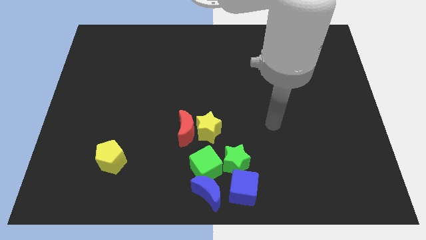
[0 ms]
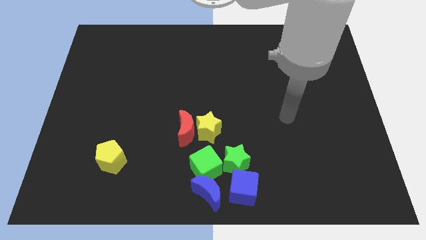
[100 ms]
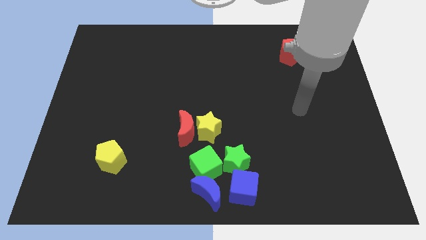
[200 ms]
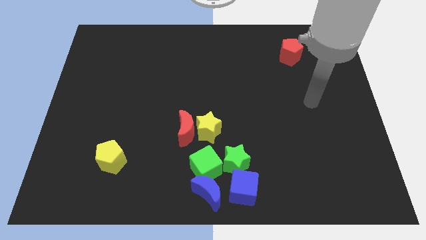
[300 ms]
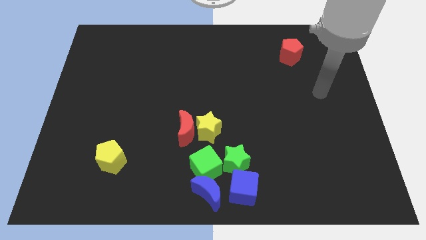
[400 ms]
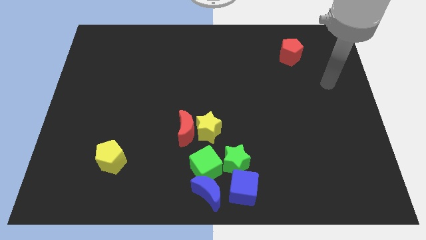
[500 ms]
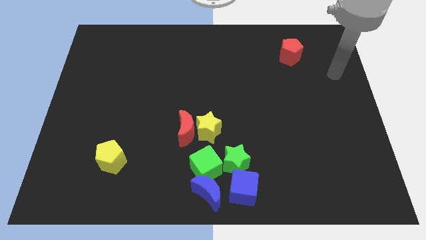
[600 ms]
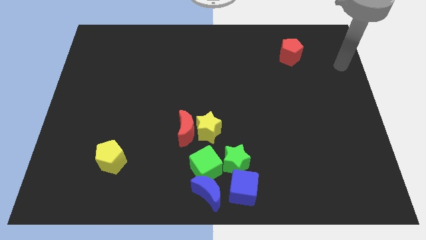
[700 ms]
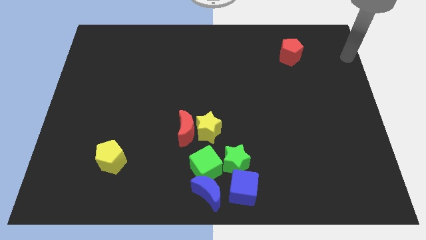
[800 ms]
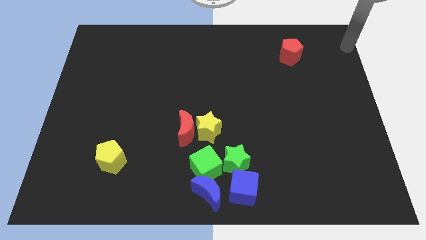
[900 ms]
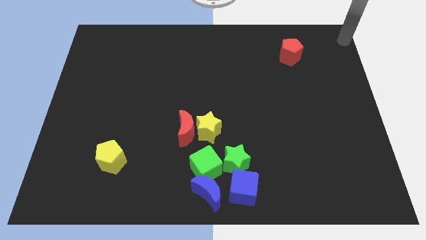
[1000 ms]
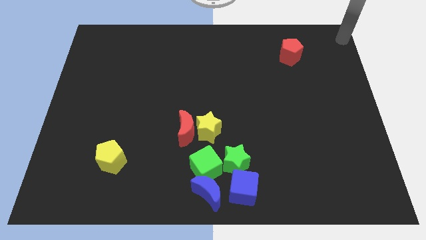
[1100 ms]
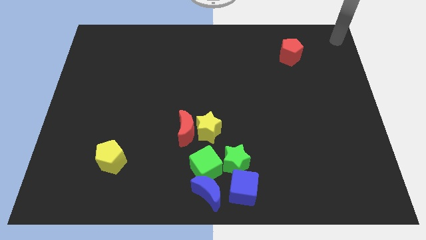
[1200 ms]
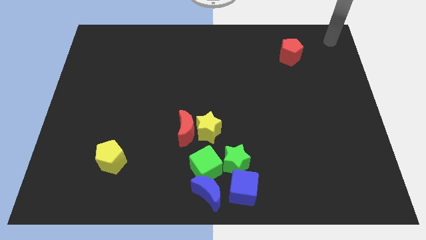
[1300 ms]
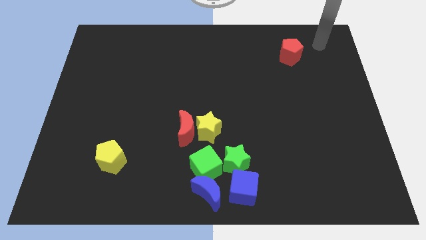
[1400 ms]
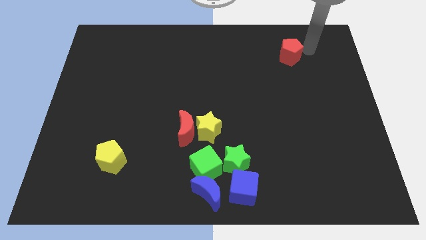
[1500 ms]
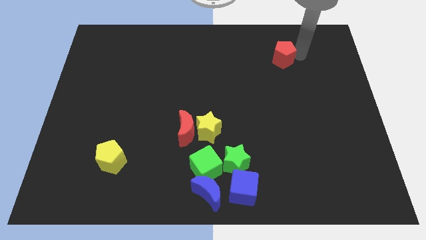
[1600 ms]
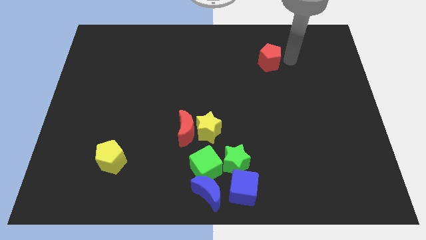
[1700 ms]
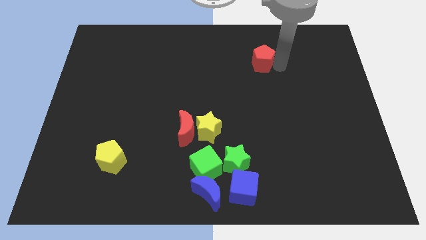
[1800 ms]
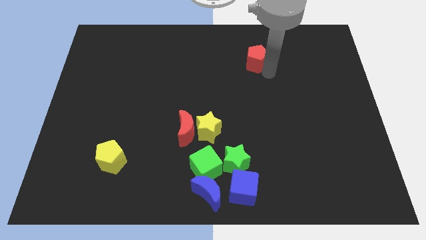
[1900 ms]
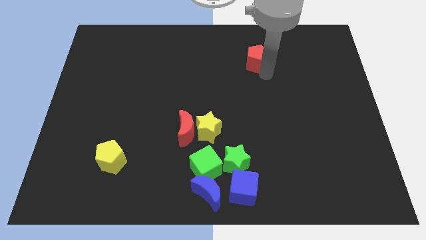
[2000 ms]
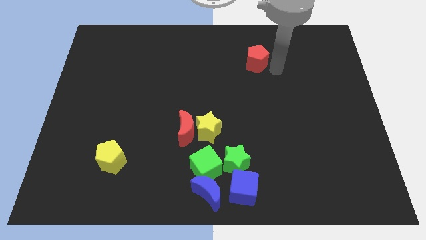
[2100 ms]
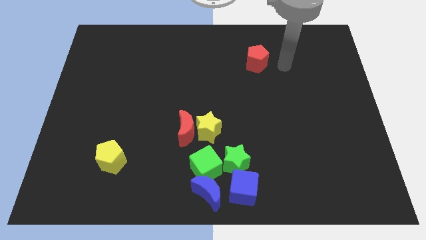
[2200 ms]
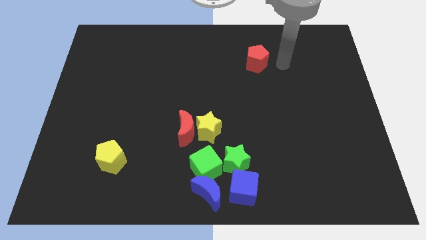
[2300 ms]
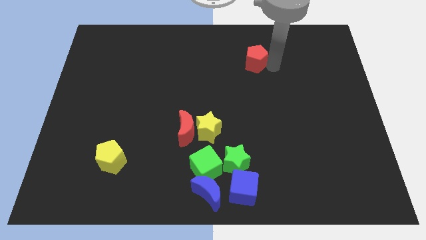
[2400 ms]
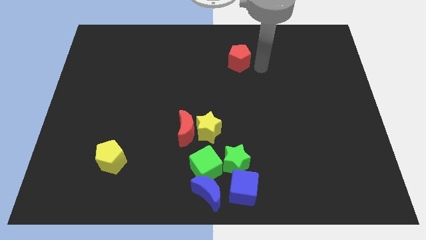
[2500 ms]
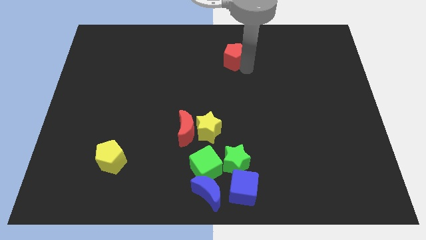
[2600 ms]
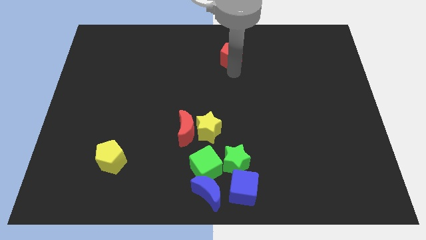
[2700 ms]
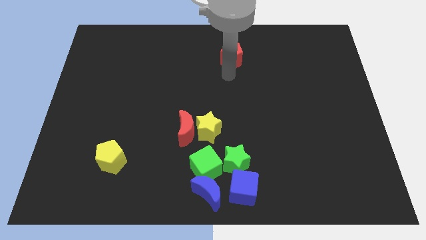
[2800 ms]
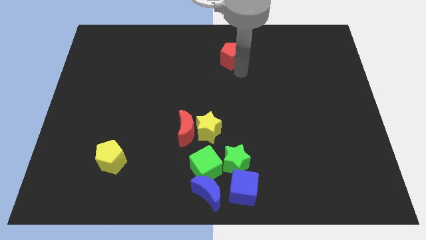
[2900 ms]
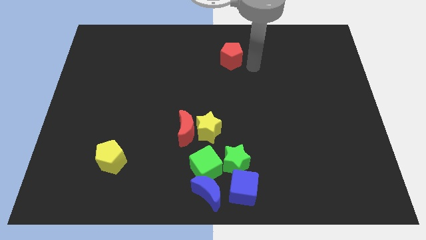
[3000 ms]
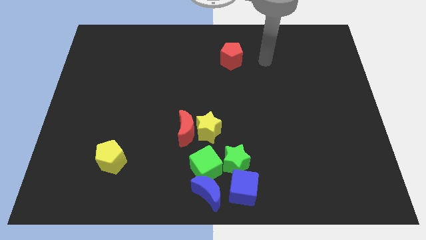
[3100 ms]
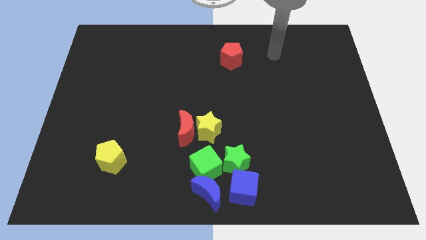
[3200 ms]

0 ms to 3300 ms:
put the red pentagon at the top center

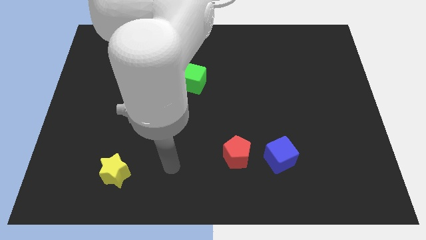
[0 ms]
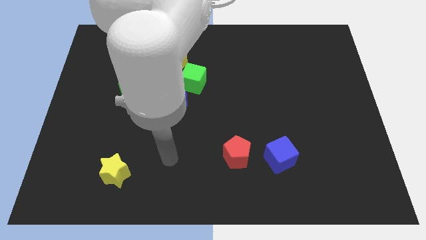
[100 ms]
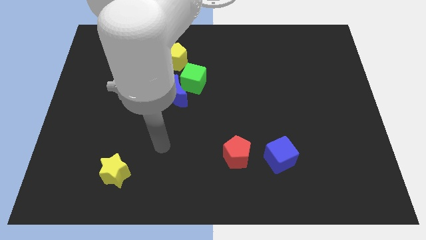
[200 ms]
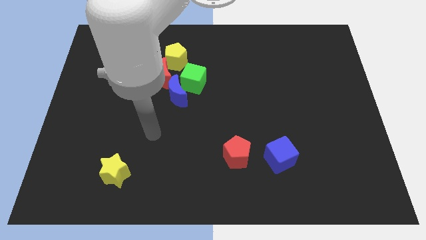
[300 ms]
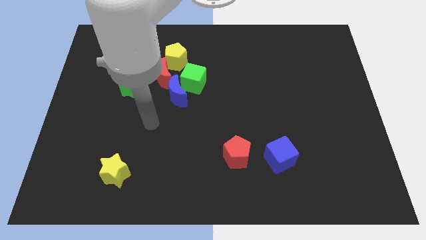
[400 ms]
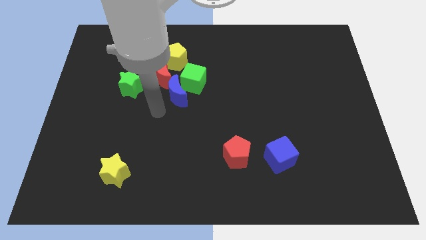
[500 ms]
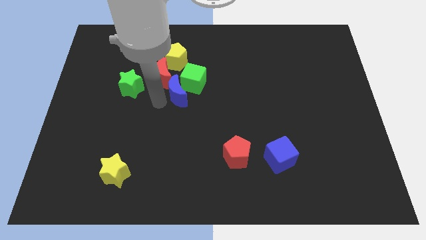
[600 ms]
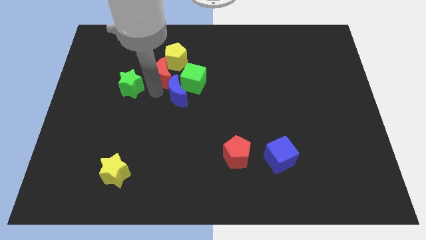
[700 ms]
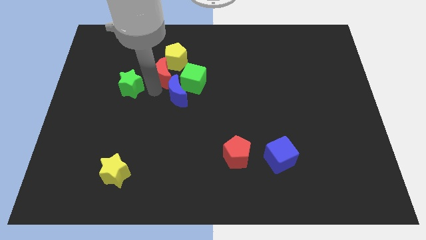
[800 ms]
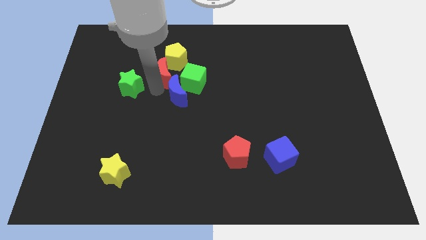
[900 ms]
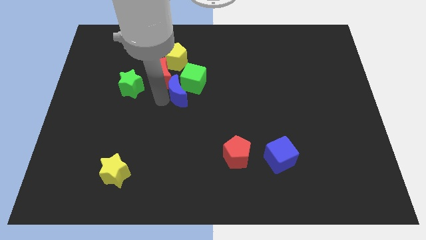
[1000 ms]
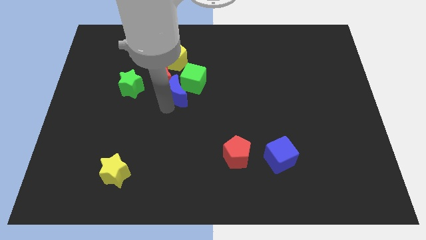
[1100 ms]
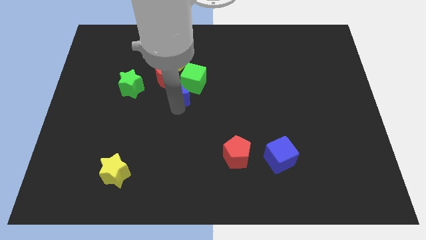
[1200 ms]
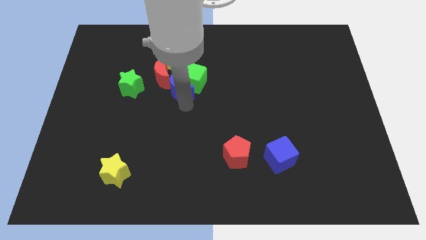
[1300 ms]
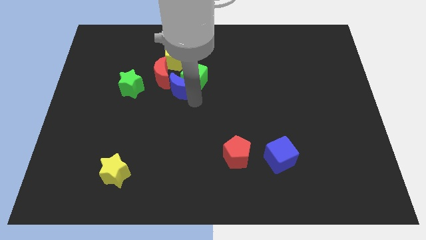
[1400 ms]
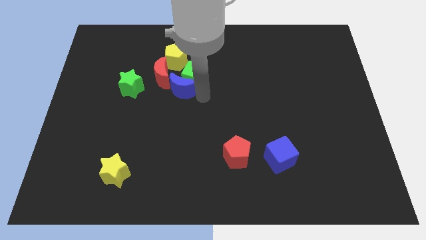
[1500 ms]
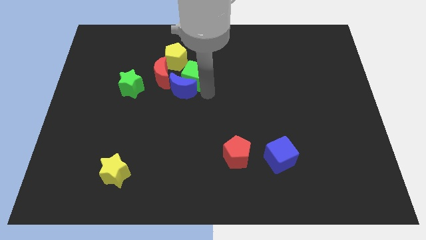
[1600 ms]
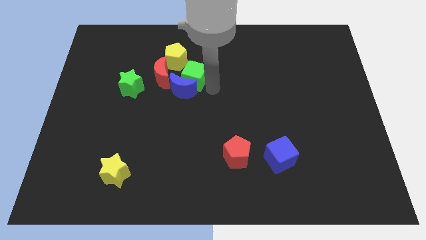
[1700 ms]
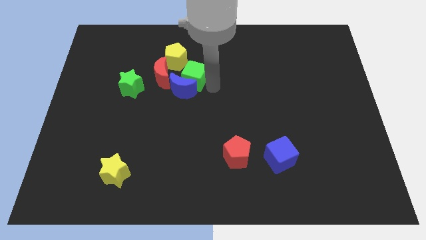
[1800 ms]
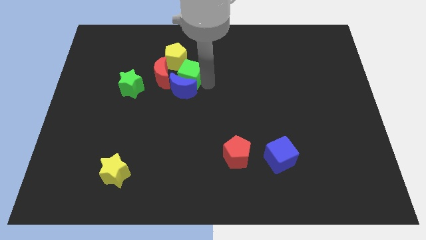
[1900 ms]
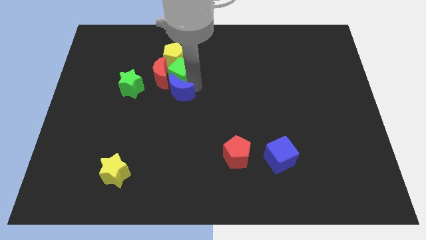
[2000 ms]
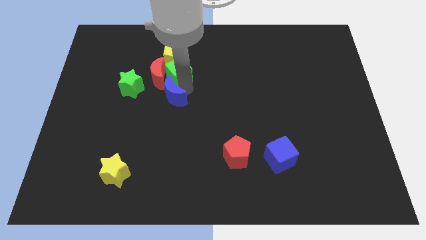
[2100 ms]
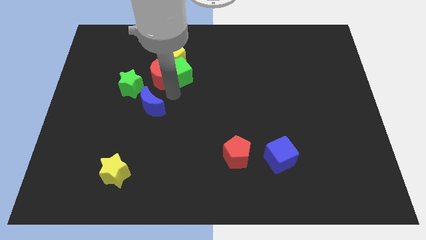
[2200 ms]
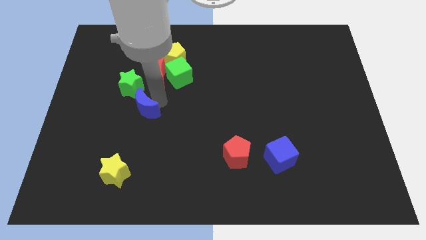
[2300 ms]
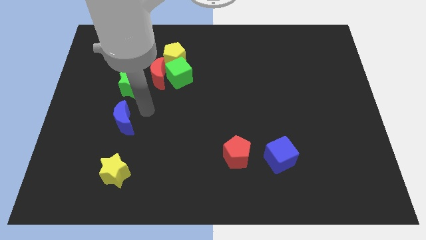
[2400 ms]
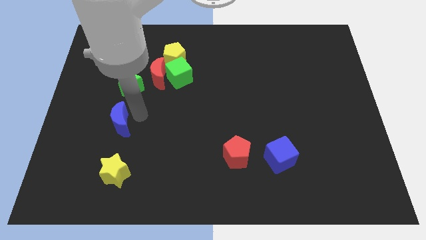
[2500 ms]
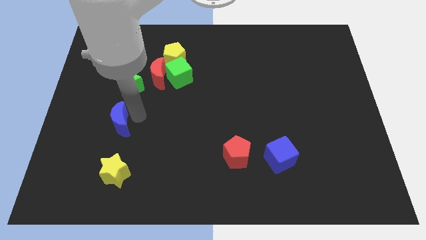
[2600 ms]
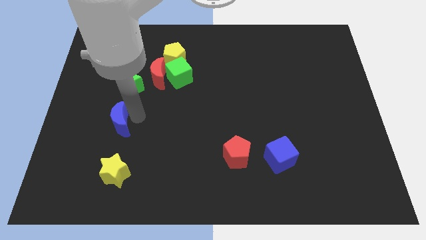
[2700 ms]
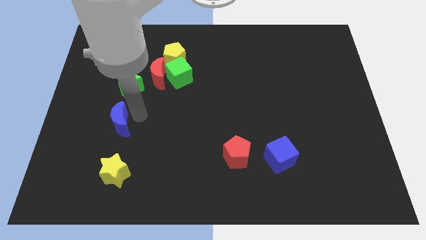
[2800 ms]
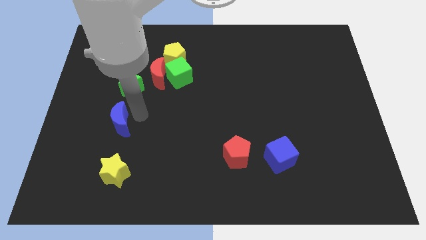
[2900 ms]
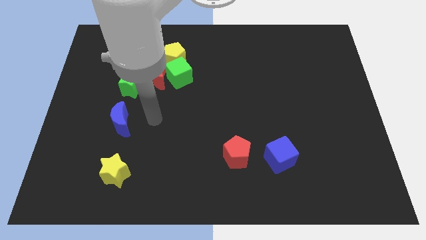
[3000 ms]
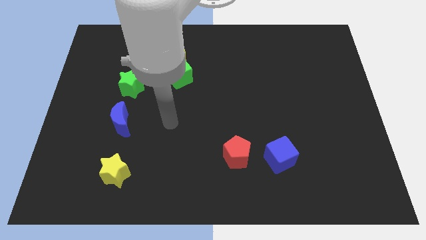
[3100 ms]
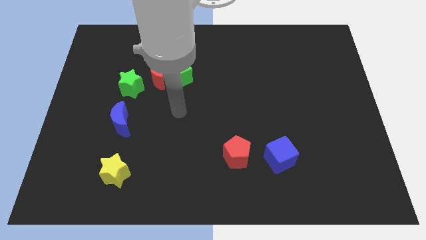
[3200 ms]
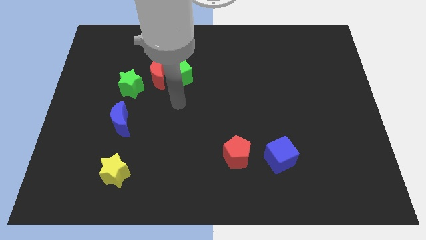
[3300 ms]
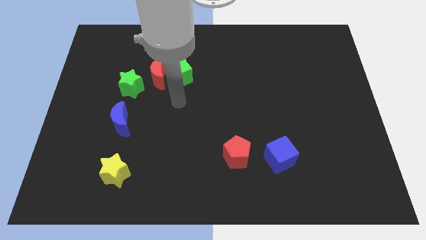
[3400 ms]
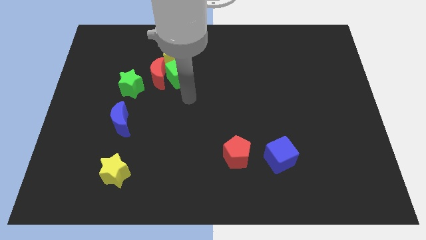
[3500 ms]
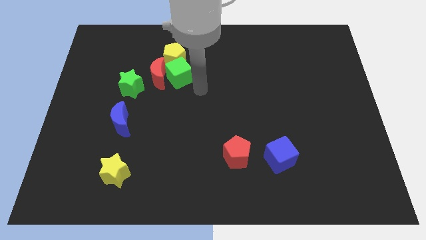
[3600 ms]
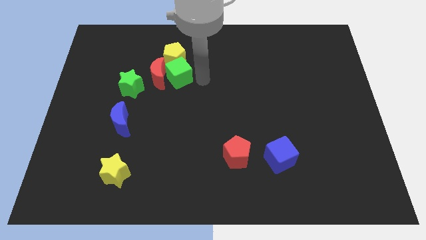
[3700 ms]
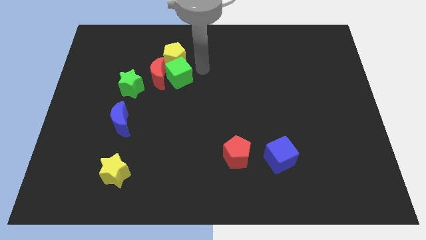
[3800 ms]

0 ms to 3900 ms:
push the blue crescent slightly to the left

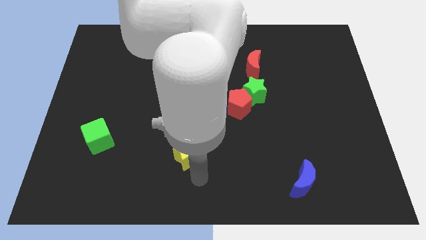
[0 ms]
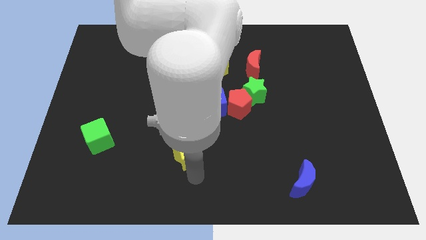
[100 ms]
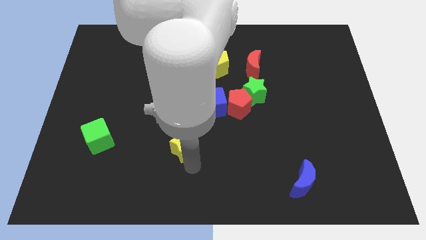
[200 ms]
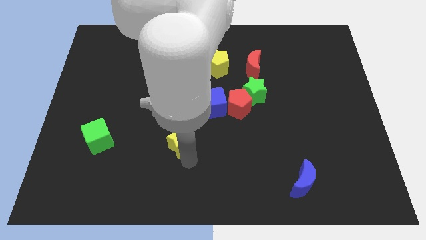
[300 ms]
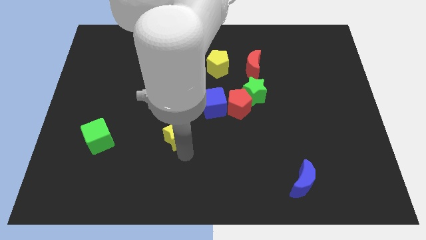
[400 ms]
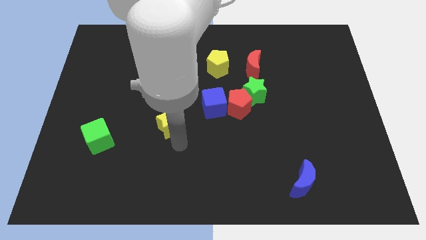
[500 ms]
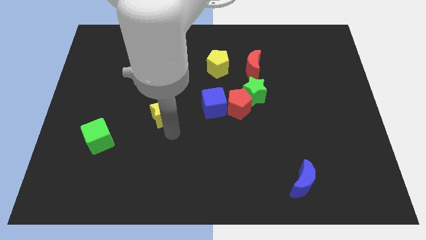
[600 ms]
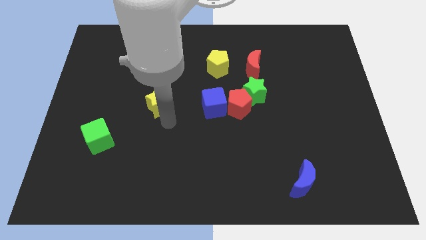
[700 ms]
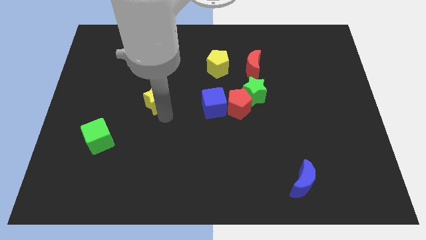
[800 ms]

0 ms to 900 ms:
move the yellow star parallel to the left of the blue cube

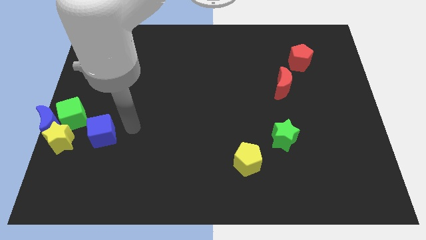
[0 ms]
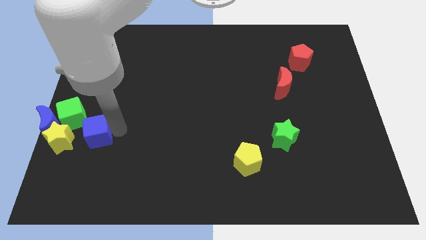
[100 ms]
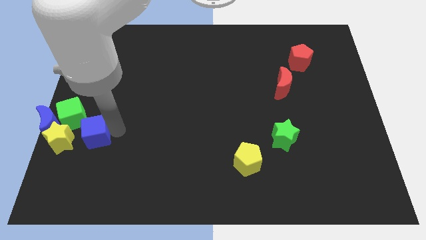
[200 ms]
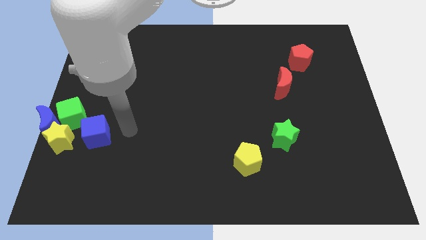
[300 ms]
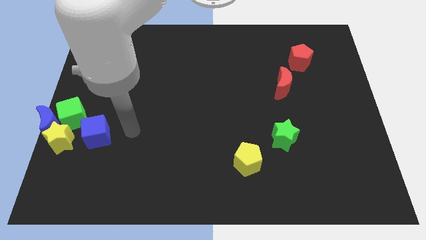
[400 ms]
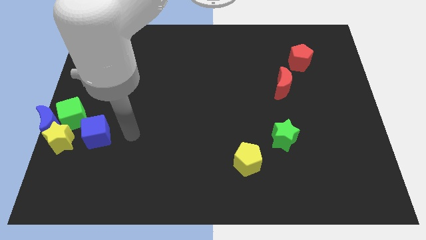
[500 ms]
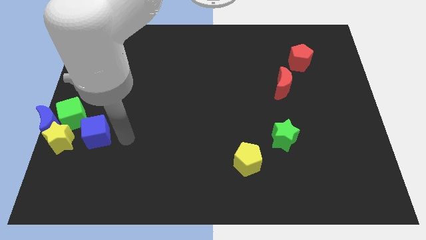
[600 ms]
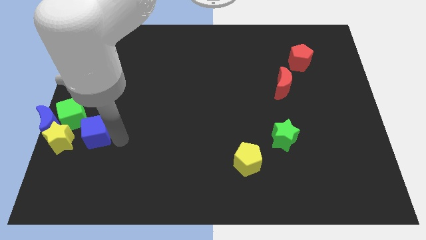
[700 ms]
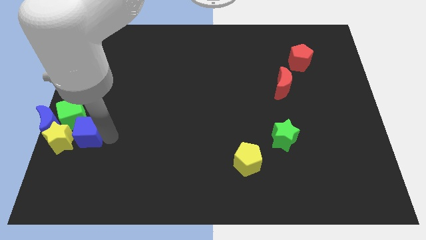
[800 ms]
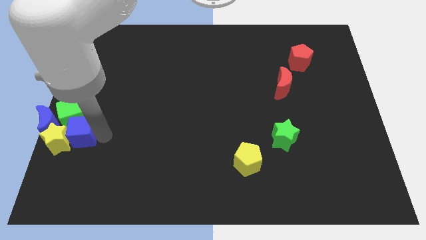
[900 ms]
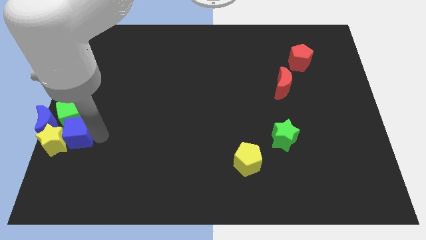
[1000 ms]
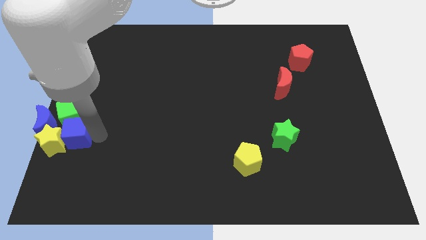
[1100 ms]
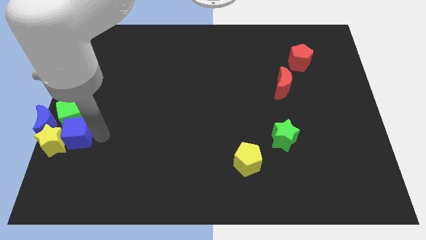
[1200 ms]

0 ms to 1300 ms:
place the blue cube vertically below the green cube
